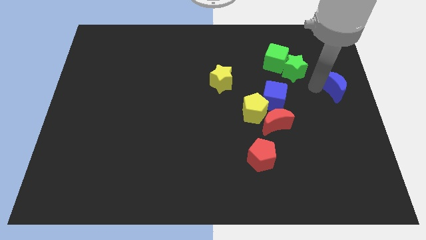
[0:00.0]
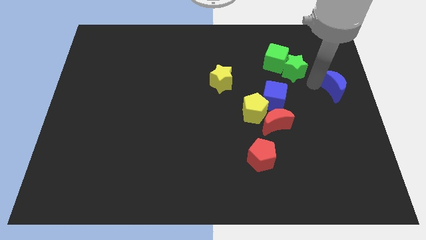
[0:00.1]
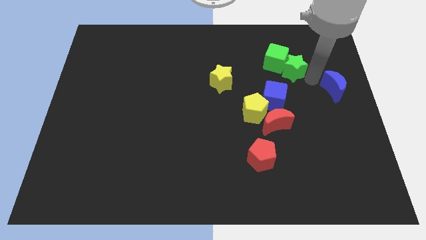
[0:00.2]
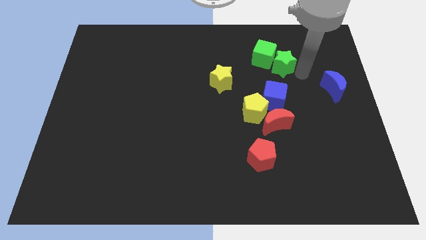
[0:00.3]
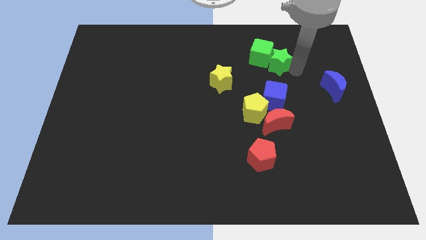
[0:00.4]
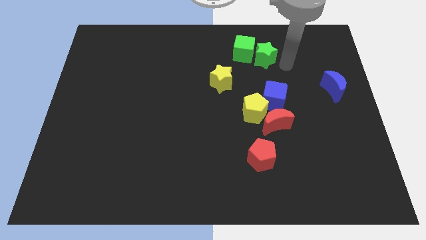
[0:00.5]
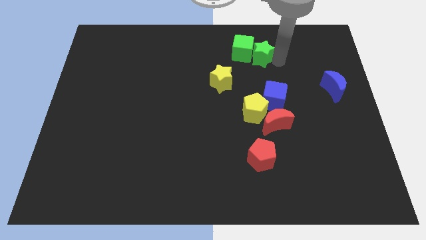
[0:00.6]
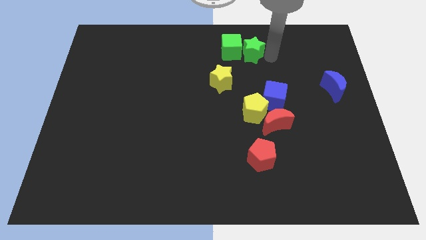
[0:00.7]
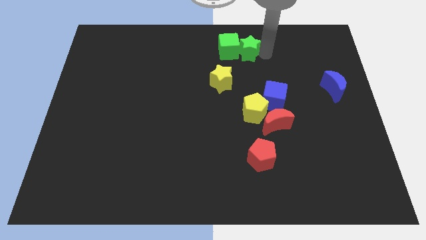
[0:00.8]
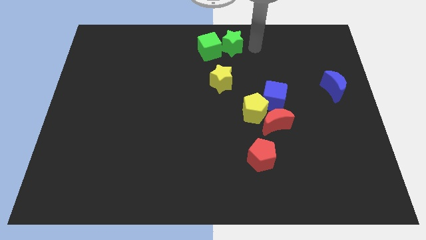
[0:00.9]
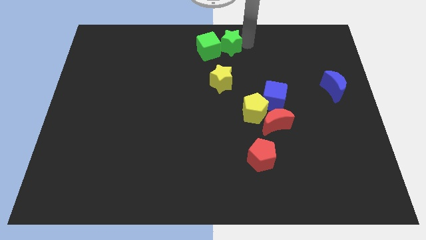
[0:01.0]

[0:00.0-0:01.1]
slide green blocks to the top center

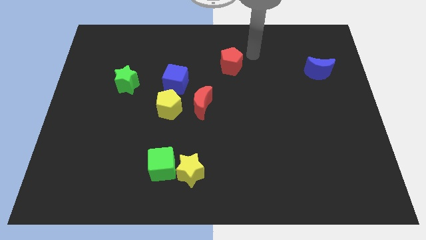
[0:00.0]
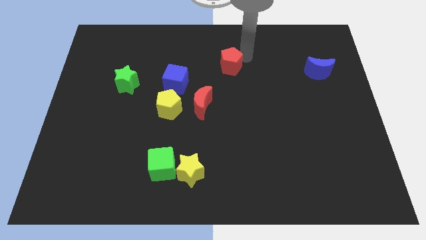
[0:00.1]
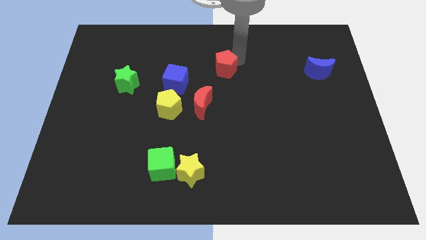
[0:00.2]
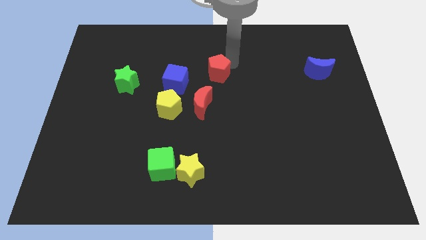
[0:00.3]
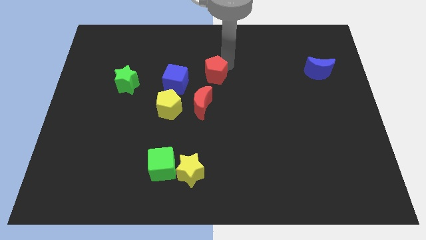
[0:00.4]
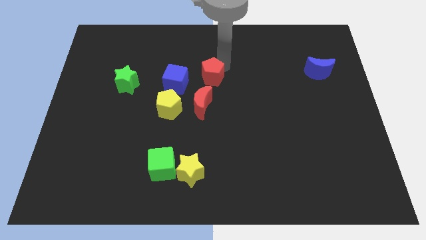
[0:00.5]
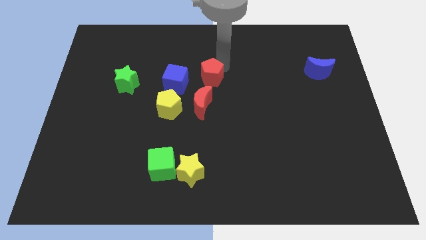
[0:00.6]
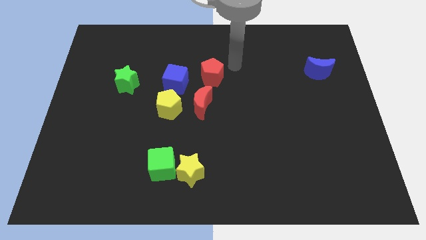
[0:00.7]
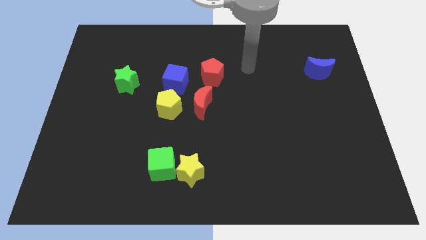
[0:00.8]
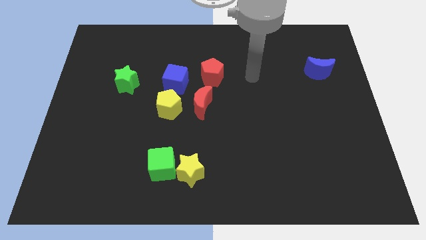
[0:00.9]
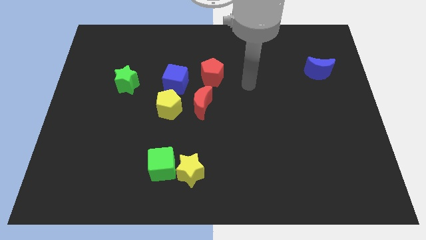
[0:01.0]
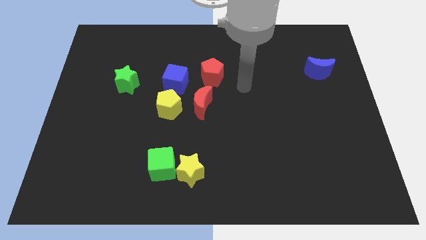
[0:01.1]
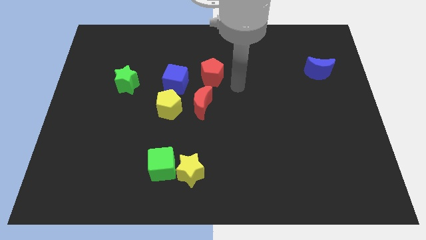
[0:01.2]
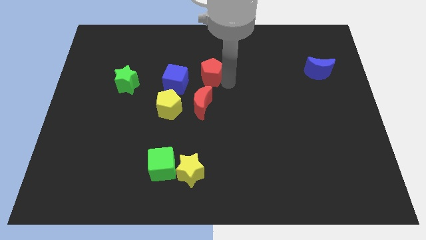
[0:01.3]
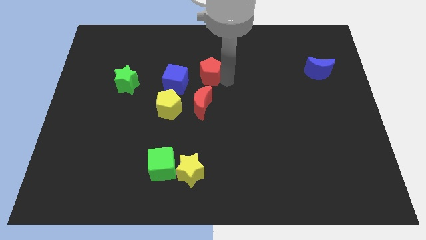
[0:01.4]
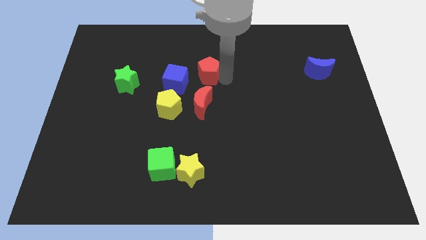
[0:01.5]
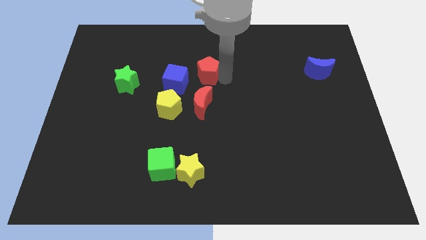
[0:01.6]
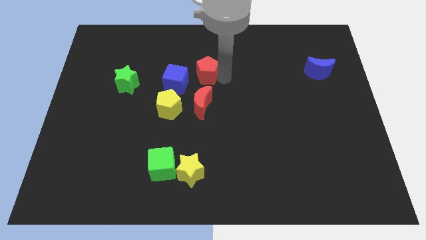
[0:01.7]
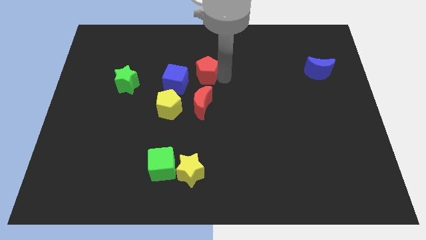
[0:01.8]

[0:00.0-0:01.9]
place the red pentagon to the top of the red moon

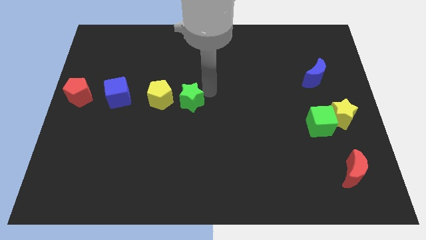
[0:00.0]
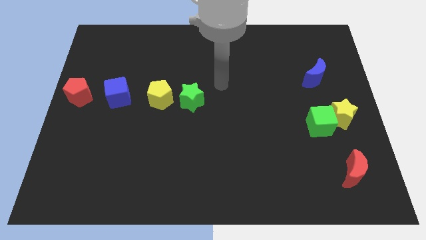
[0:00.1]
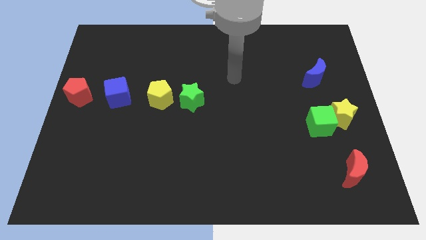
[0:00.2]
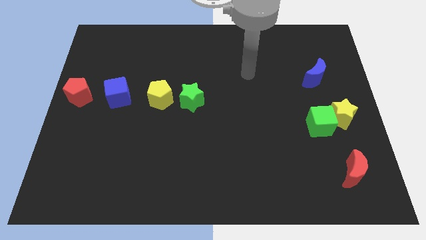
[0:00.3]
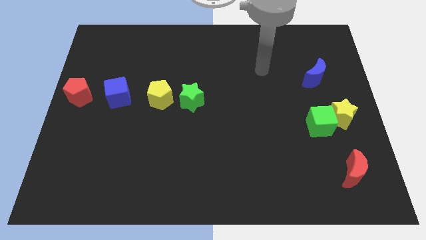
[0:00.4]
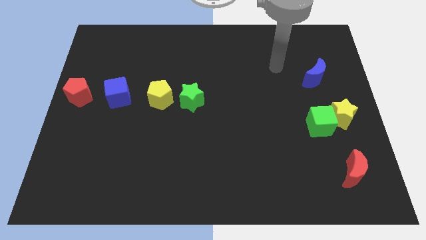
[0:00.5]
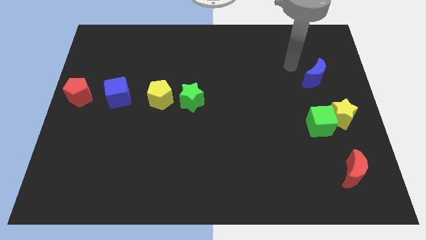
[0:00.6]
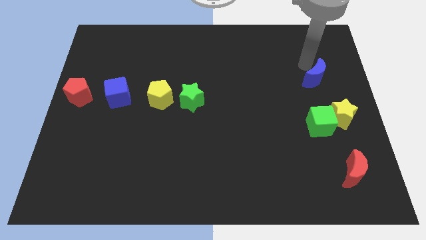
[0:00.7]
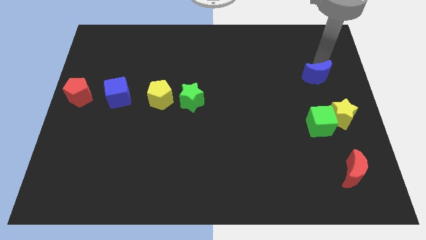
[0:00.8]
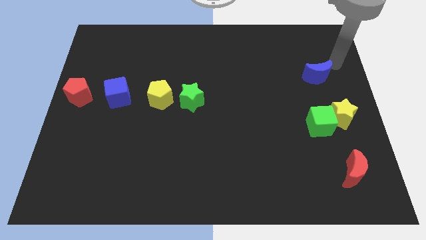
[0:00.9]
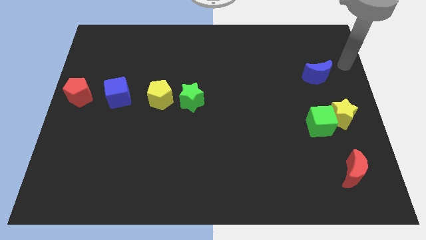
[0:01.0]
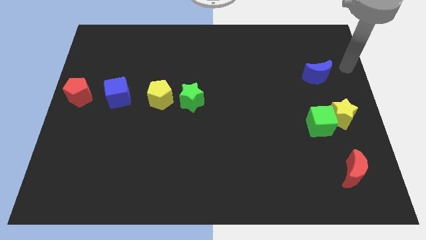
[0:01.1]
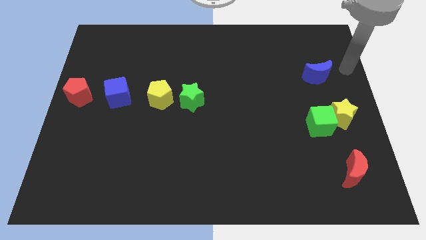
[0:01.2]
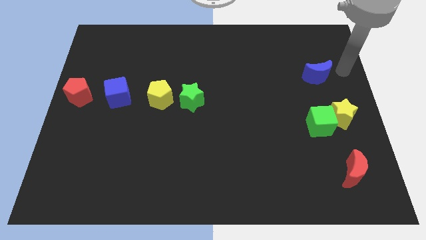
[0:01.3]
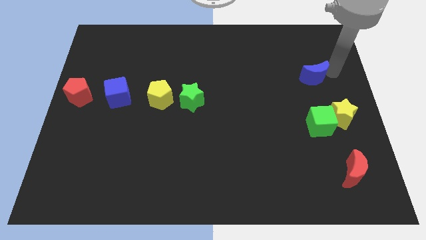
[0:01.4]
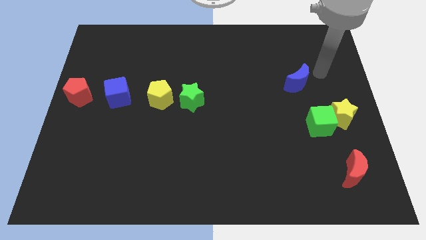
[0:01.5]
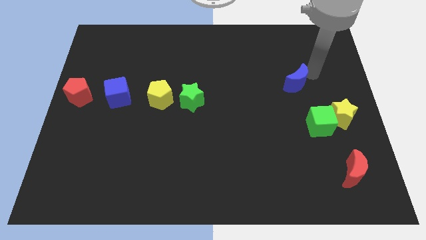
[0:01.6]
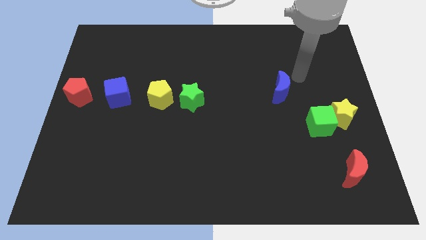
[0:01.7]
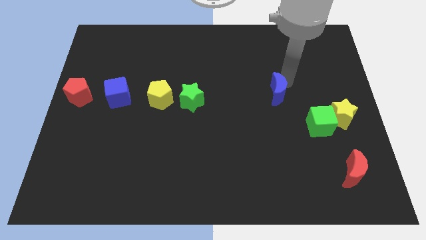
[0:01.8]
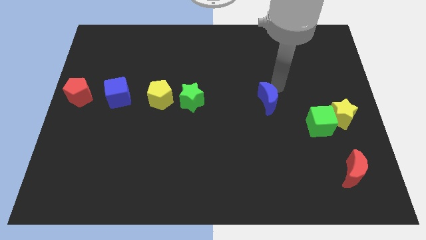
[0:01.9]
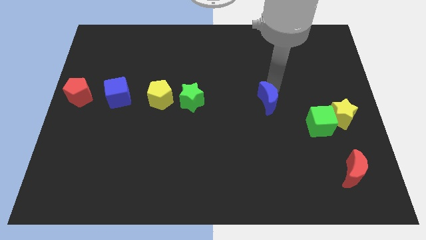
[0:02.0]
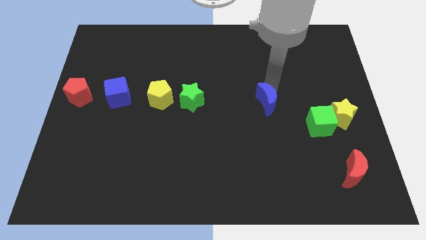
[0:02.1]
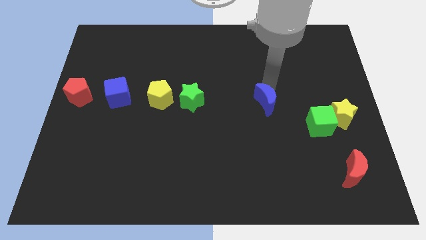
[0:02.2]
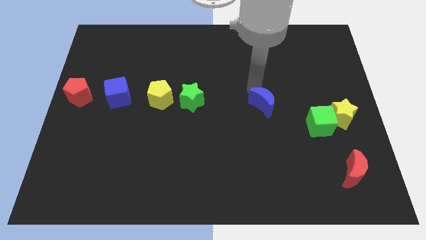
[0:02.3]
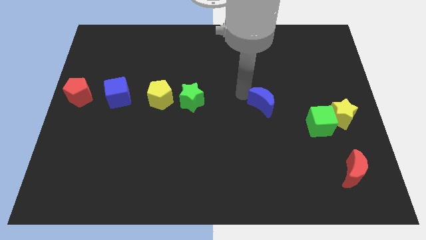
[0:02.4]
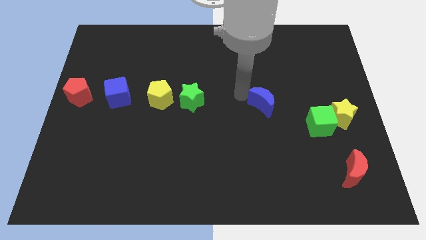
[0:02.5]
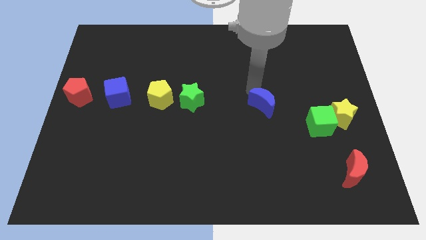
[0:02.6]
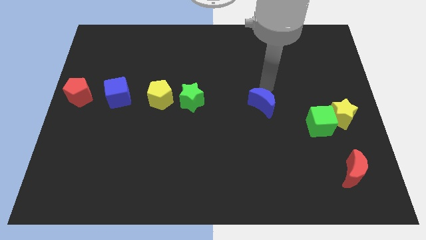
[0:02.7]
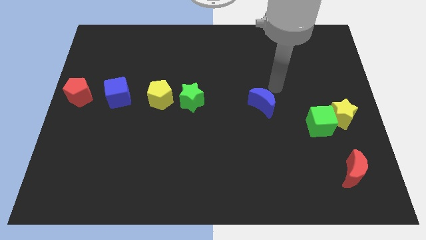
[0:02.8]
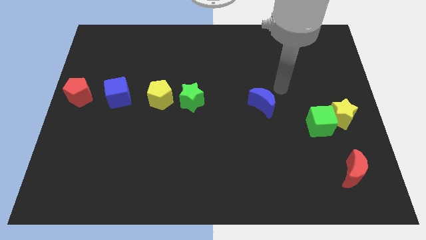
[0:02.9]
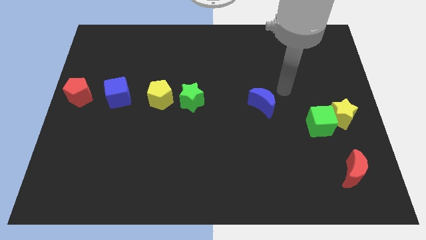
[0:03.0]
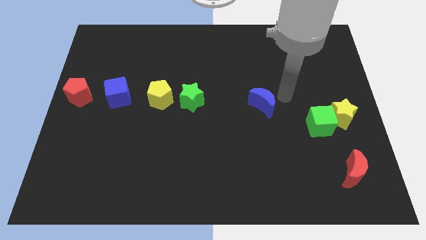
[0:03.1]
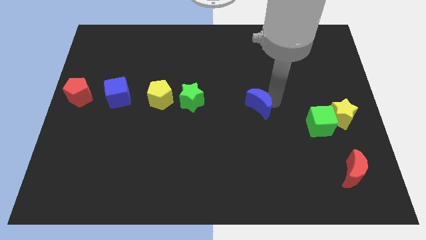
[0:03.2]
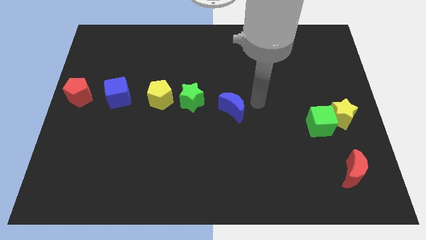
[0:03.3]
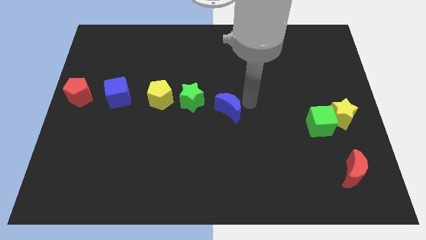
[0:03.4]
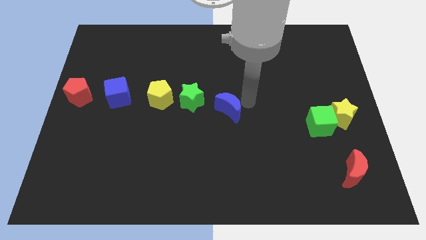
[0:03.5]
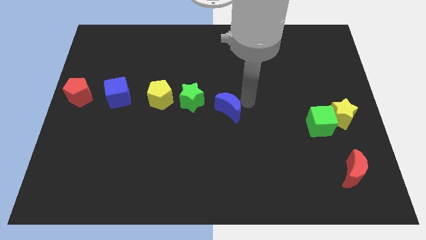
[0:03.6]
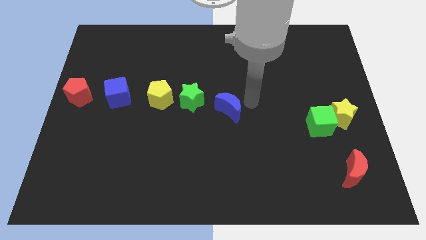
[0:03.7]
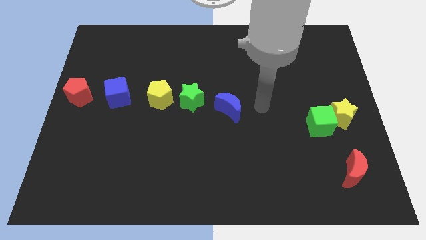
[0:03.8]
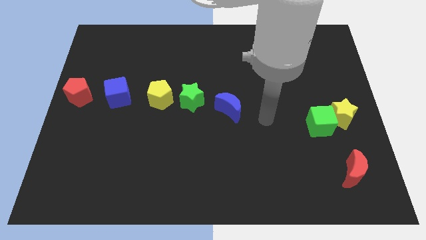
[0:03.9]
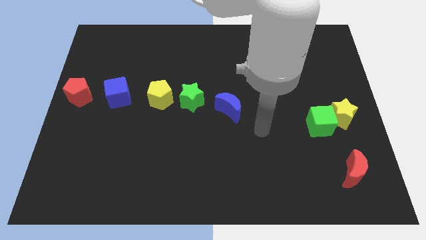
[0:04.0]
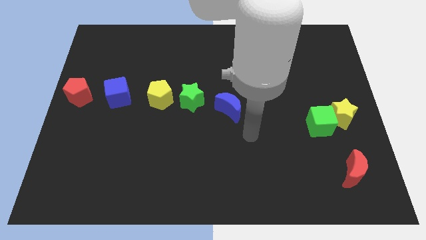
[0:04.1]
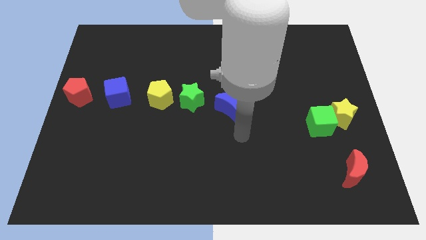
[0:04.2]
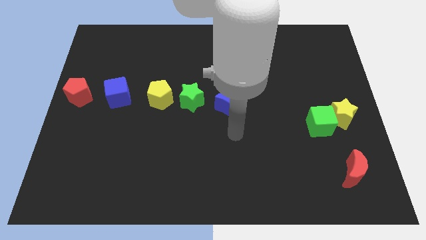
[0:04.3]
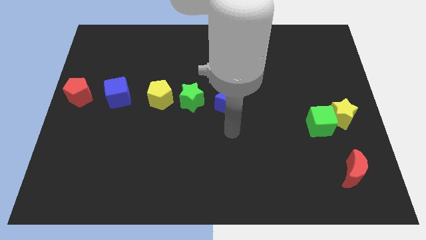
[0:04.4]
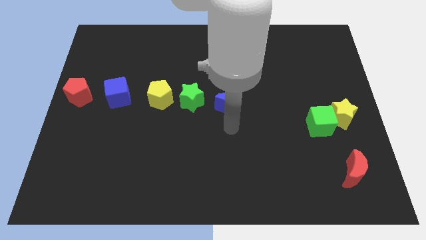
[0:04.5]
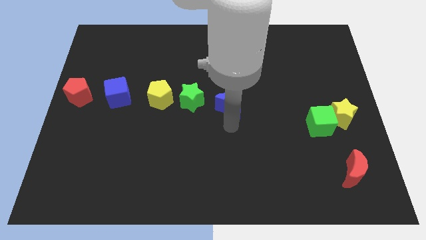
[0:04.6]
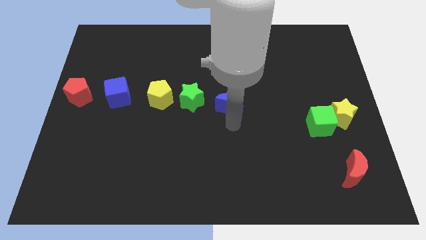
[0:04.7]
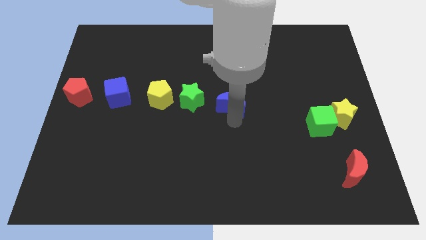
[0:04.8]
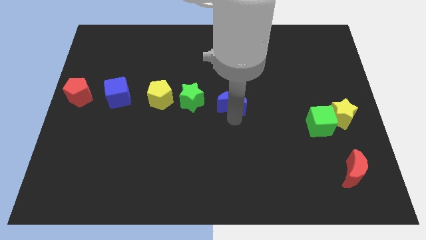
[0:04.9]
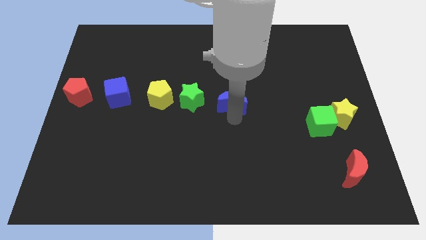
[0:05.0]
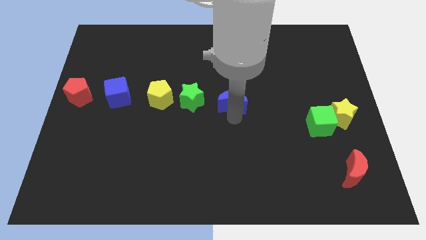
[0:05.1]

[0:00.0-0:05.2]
move blue moon to the center of the board

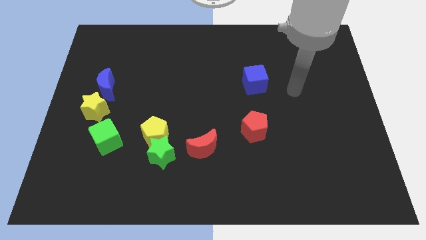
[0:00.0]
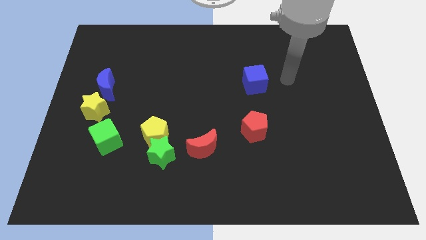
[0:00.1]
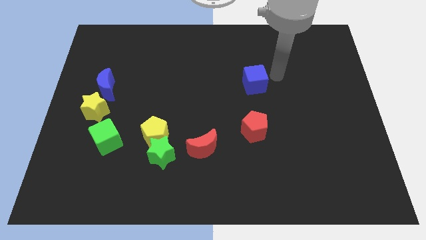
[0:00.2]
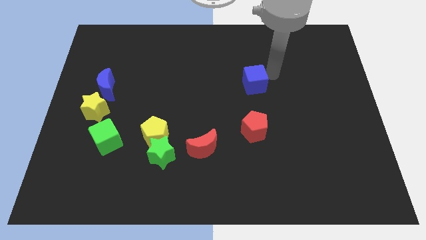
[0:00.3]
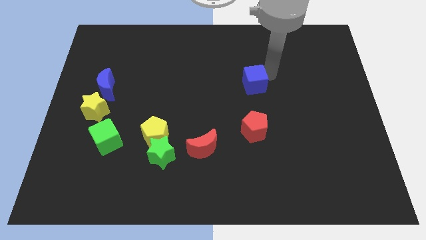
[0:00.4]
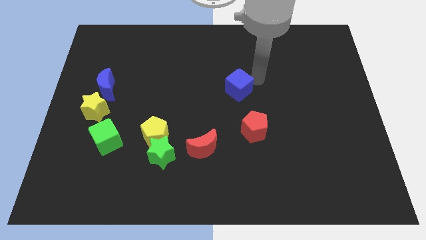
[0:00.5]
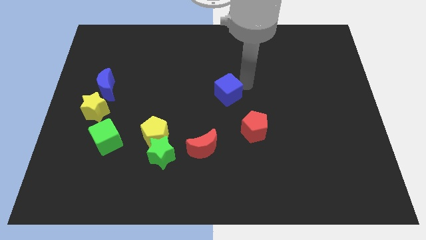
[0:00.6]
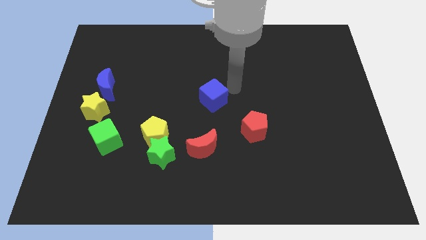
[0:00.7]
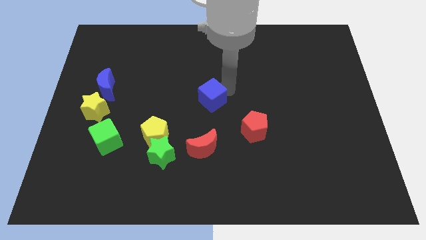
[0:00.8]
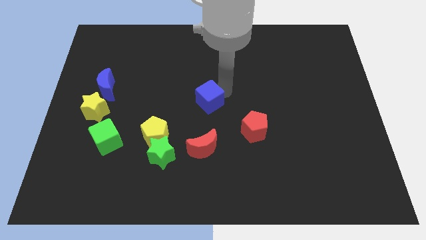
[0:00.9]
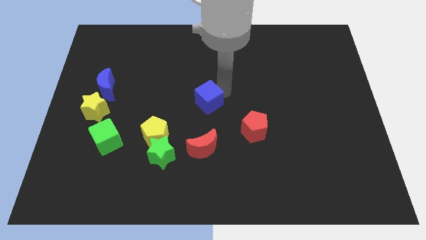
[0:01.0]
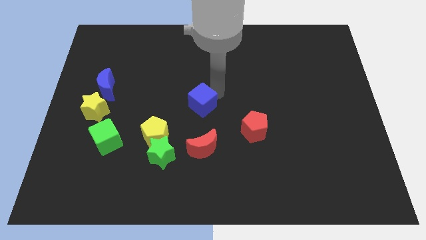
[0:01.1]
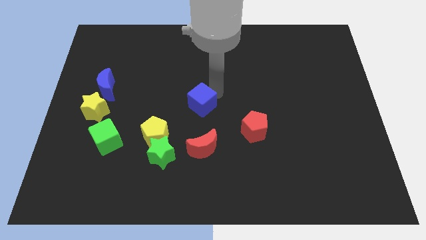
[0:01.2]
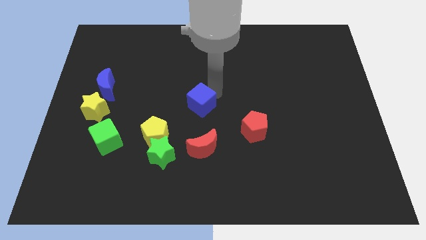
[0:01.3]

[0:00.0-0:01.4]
place the blue cube at the center of the board
